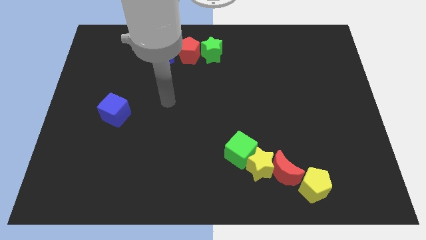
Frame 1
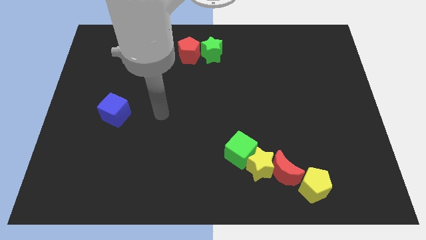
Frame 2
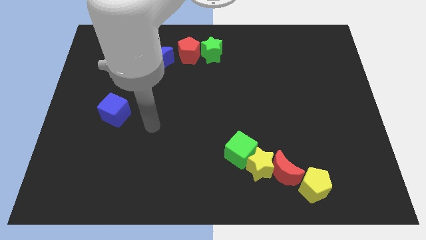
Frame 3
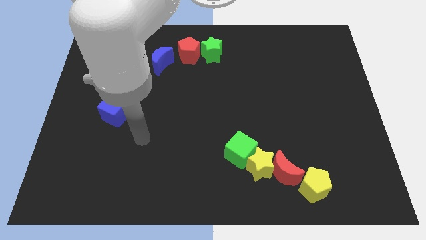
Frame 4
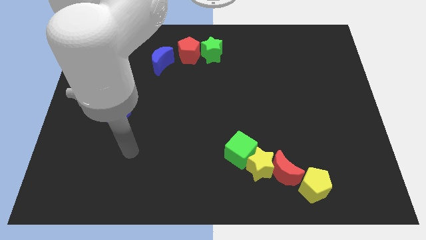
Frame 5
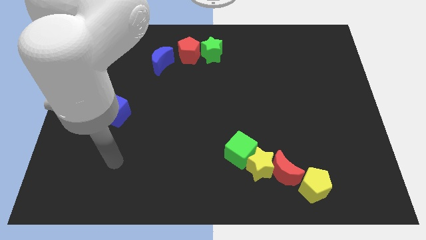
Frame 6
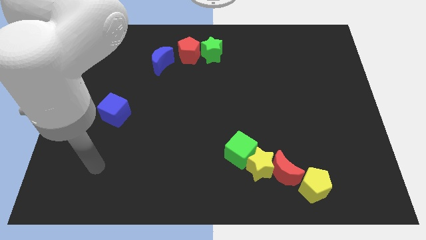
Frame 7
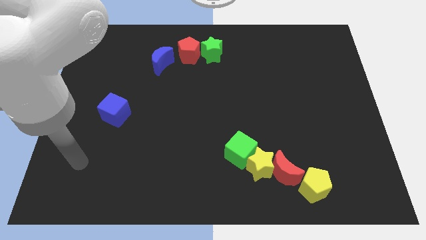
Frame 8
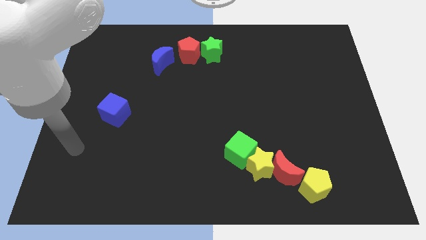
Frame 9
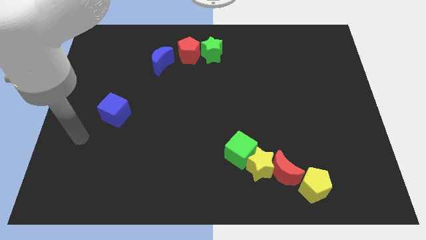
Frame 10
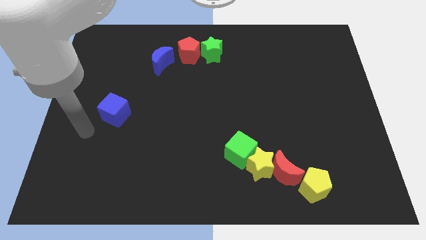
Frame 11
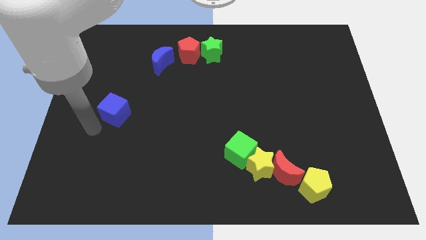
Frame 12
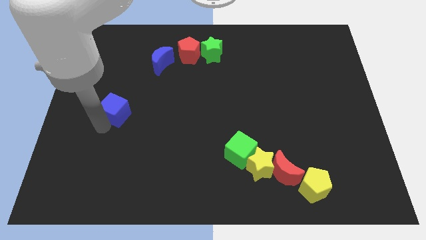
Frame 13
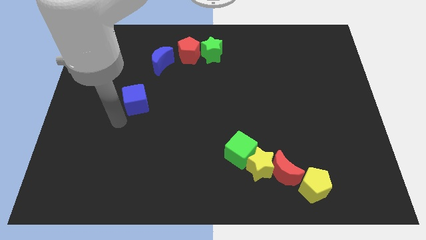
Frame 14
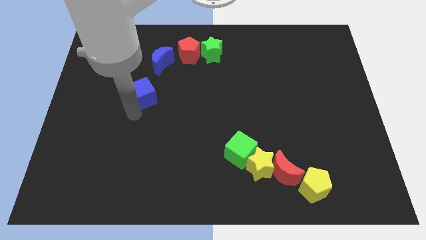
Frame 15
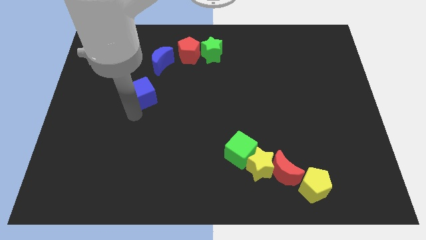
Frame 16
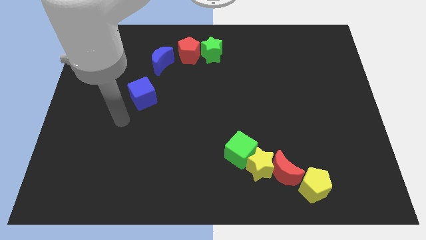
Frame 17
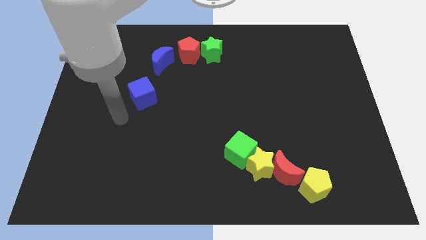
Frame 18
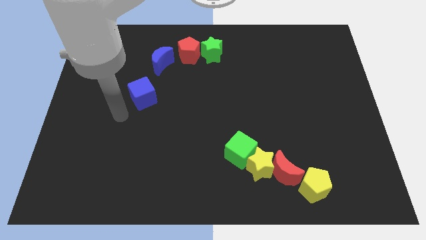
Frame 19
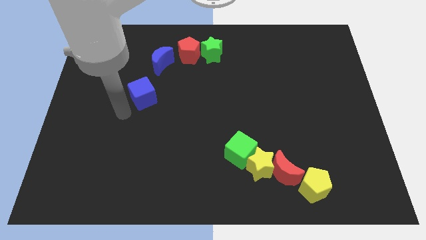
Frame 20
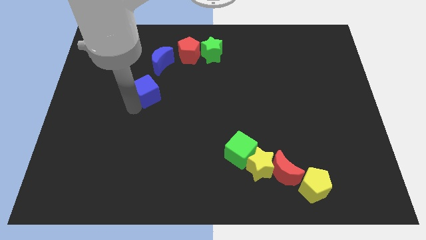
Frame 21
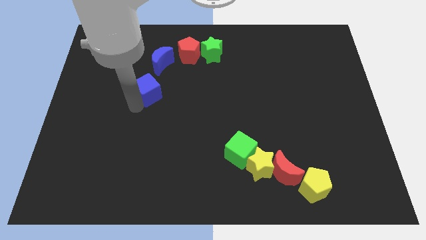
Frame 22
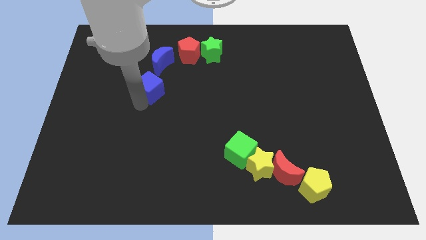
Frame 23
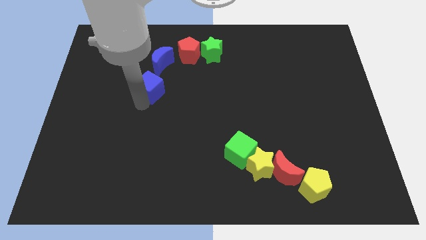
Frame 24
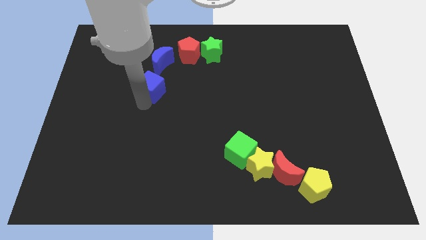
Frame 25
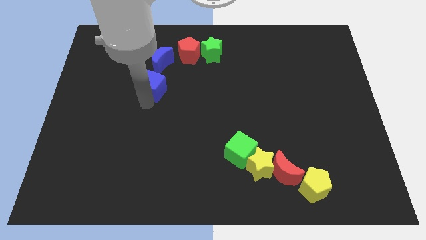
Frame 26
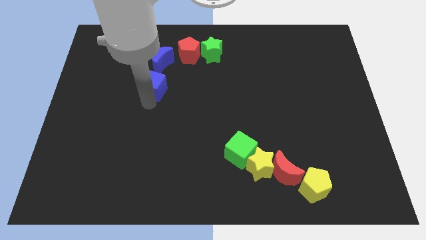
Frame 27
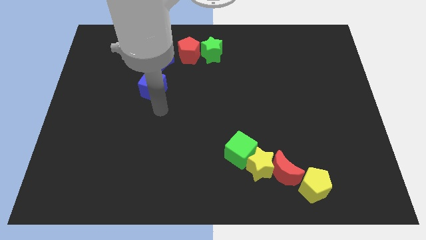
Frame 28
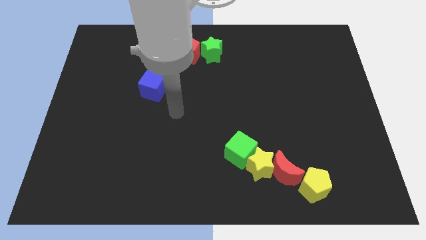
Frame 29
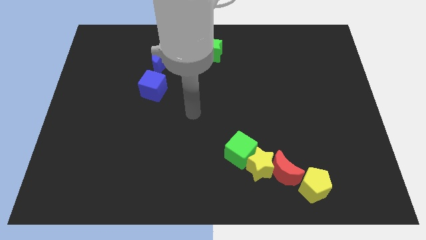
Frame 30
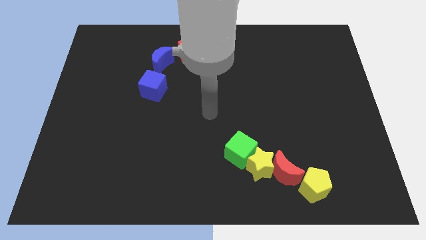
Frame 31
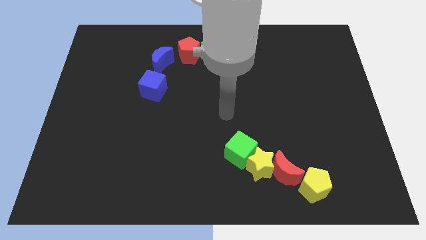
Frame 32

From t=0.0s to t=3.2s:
move the blue cube to the bottom side of the blue moon

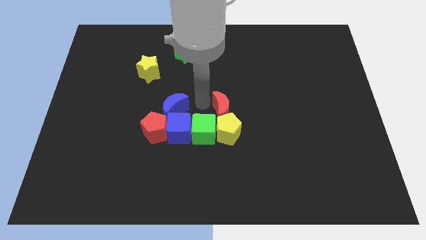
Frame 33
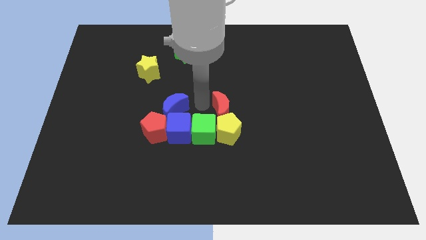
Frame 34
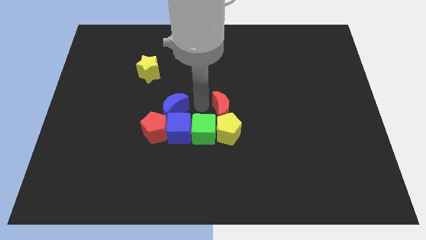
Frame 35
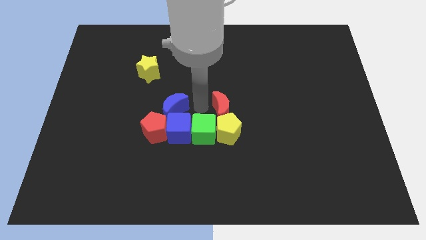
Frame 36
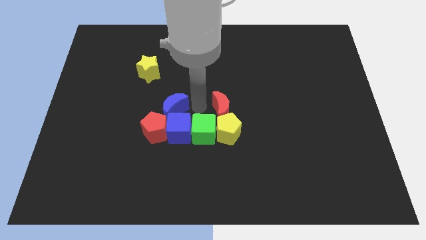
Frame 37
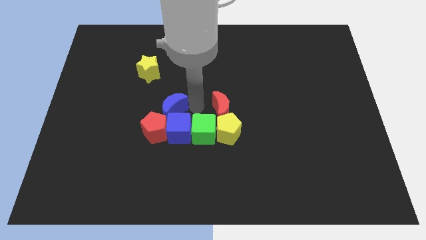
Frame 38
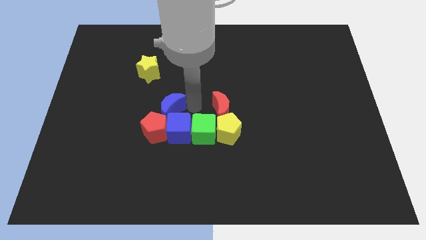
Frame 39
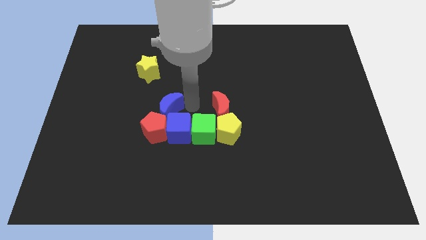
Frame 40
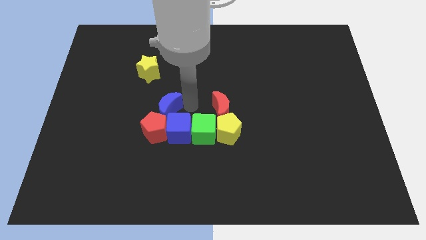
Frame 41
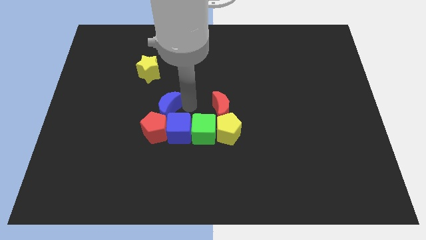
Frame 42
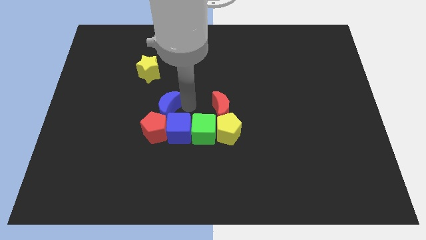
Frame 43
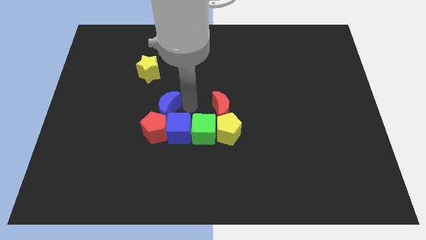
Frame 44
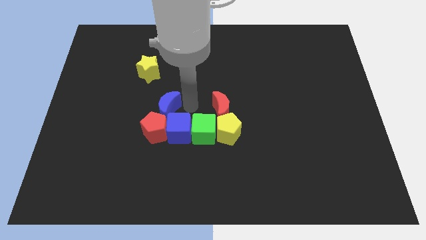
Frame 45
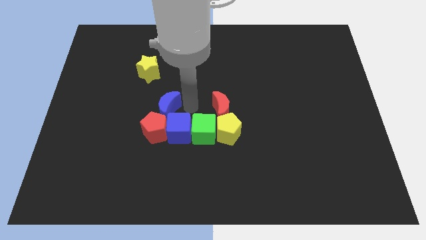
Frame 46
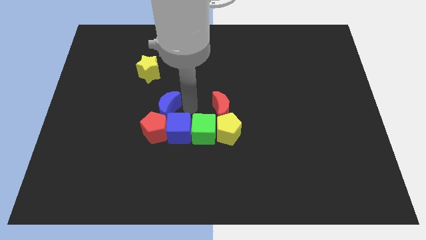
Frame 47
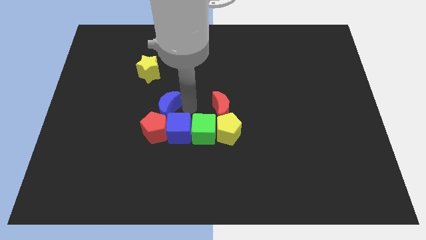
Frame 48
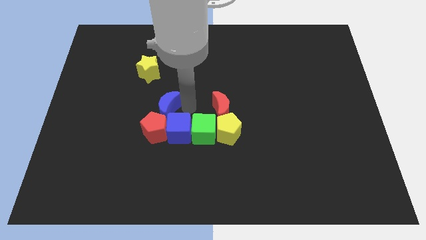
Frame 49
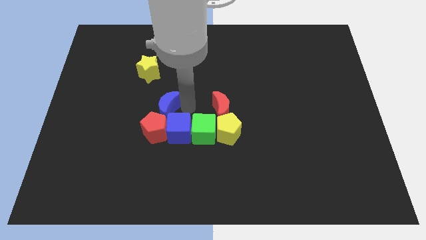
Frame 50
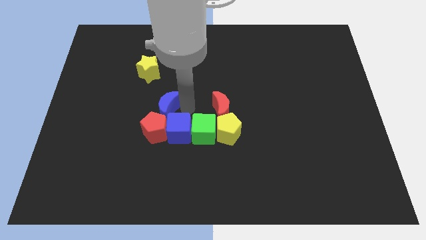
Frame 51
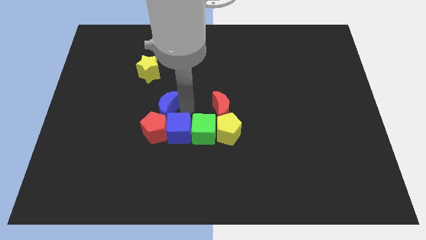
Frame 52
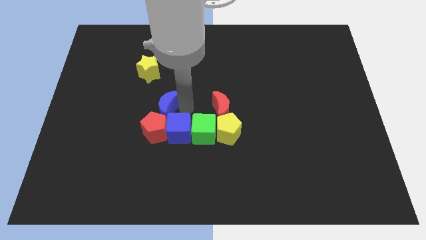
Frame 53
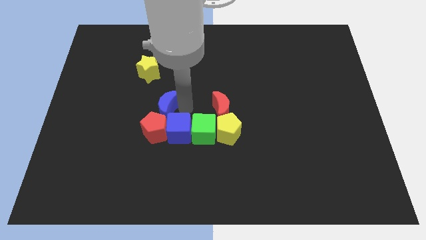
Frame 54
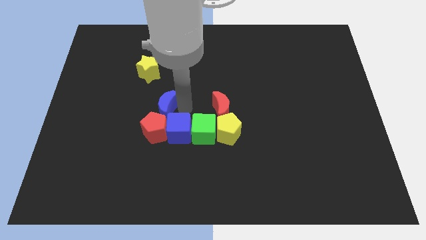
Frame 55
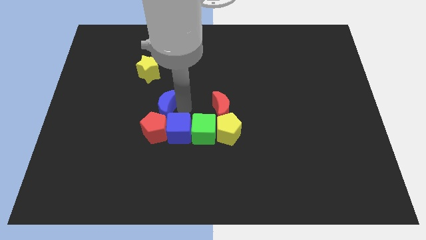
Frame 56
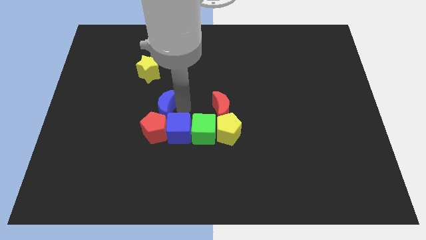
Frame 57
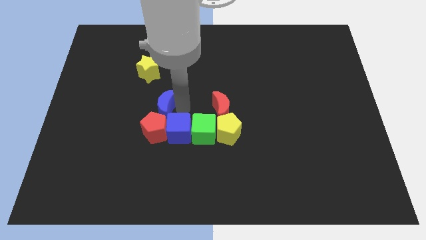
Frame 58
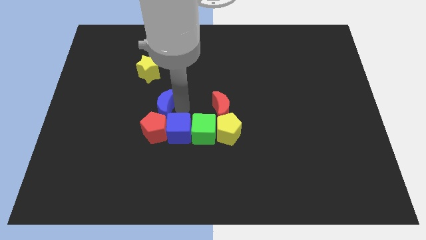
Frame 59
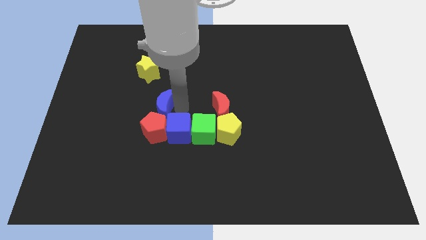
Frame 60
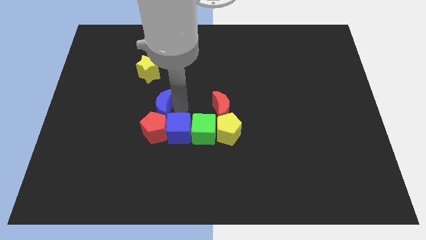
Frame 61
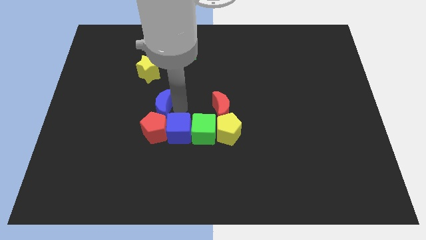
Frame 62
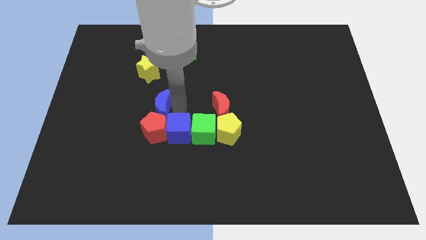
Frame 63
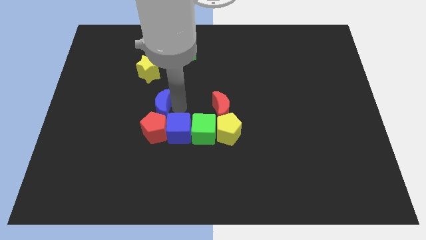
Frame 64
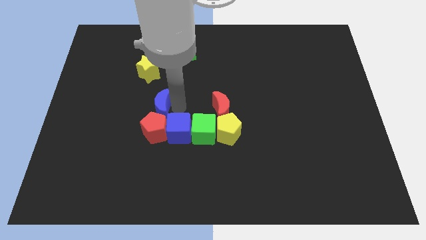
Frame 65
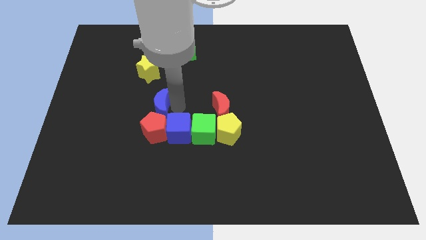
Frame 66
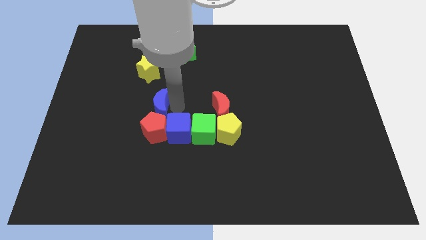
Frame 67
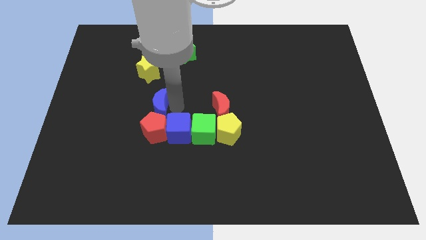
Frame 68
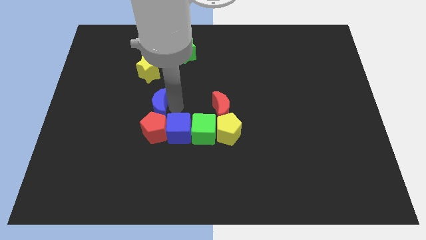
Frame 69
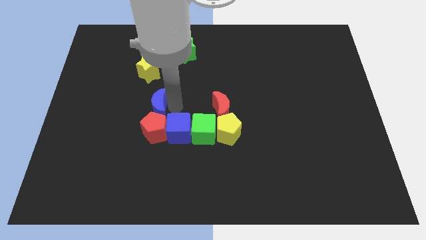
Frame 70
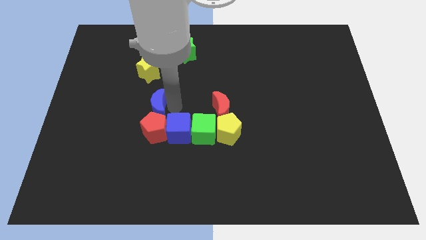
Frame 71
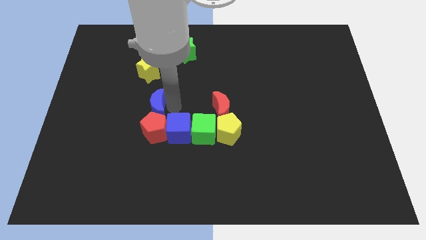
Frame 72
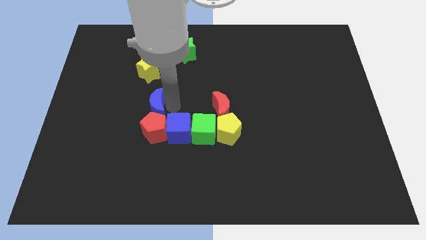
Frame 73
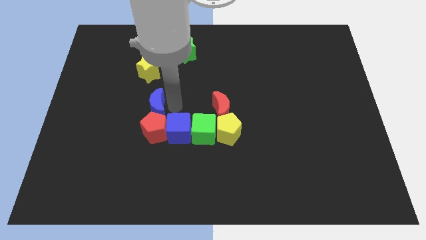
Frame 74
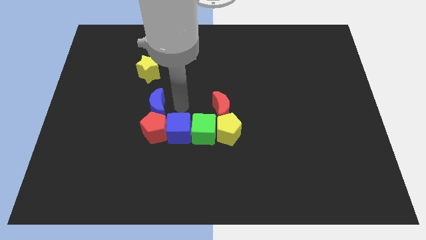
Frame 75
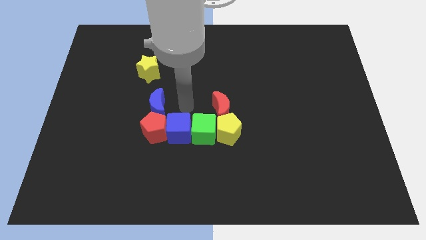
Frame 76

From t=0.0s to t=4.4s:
move the blue moon above to the red pentagon

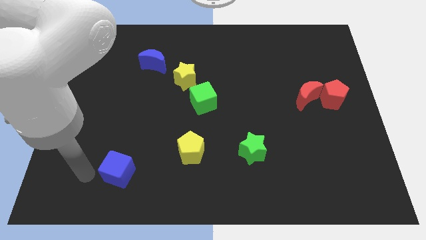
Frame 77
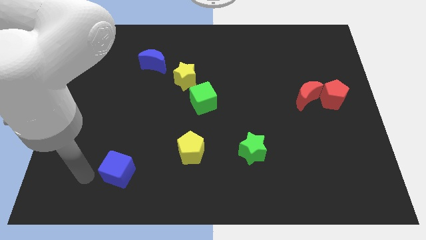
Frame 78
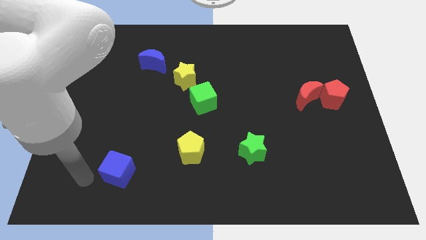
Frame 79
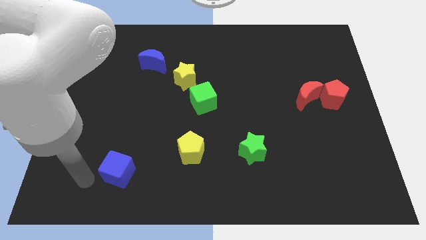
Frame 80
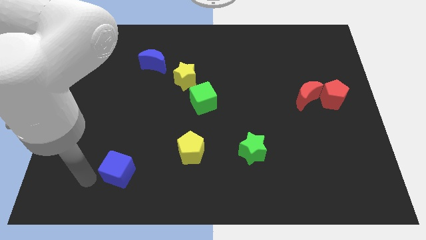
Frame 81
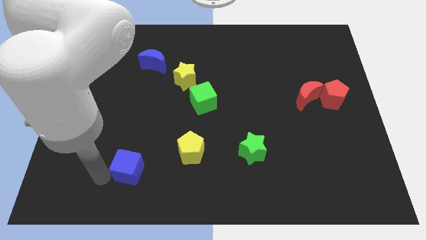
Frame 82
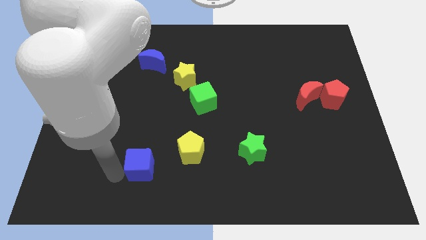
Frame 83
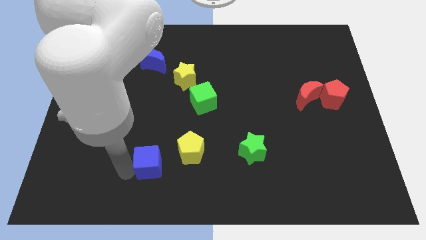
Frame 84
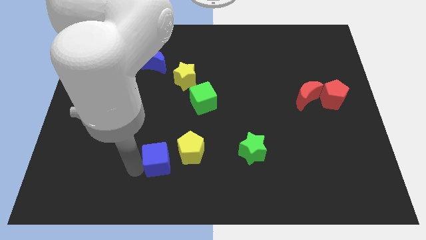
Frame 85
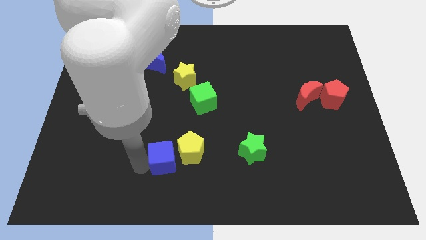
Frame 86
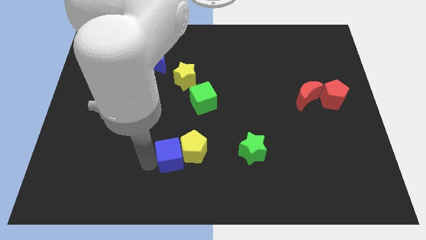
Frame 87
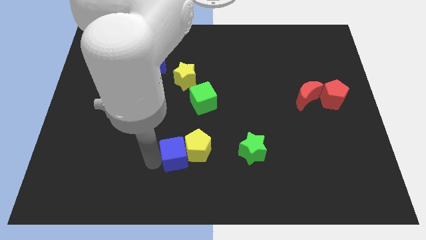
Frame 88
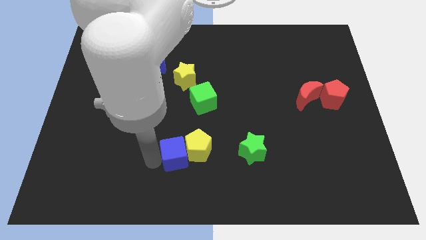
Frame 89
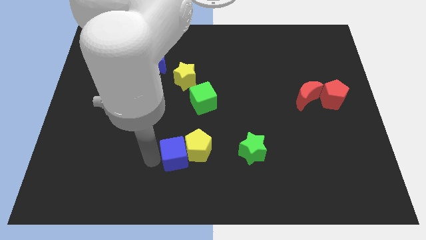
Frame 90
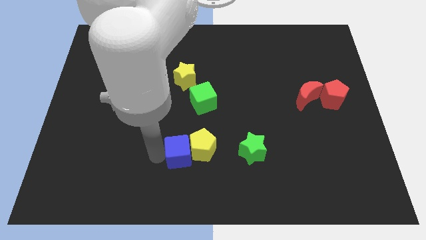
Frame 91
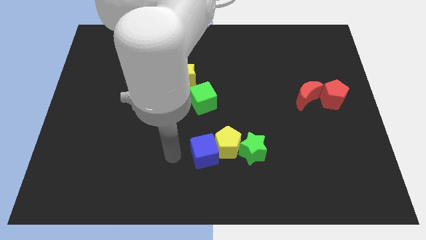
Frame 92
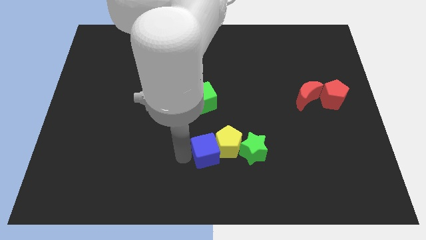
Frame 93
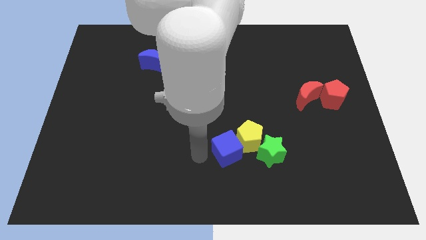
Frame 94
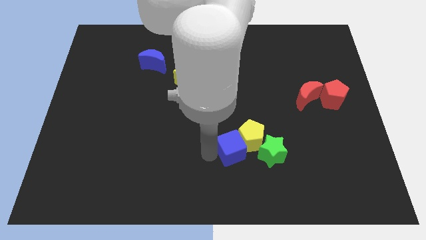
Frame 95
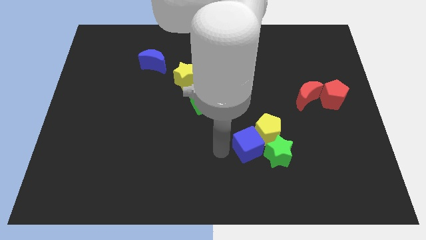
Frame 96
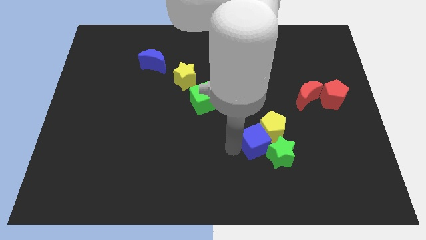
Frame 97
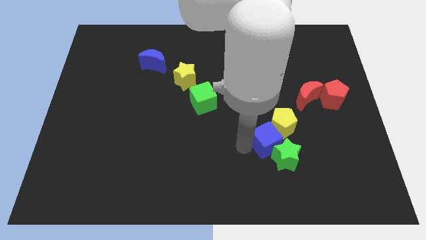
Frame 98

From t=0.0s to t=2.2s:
place the blue cube and the yellow pentagon above the green star
